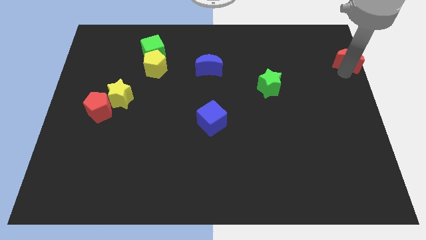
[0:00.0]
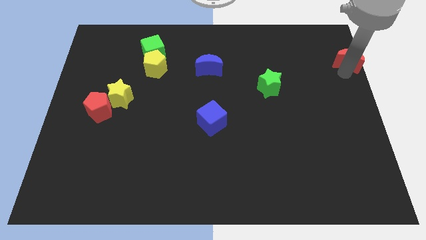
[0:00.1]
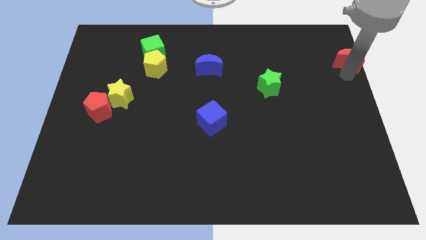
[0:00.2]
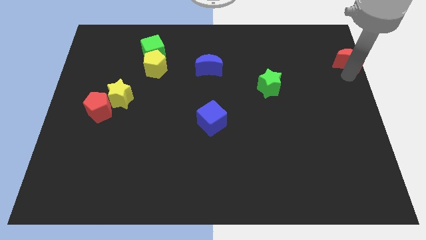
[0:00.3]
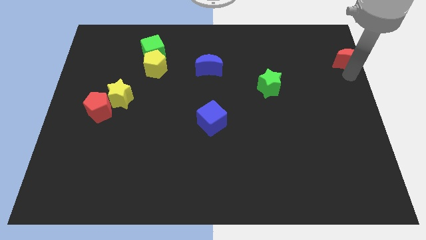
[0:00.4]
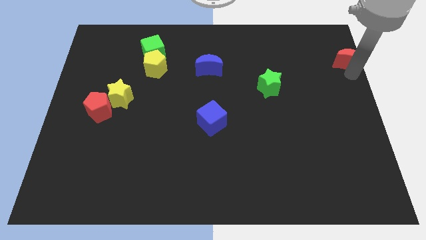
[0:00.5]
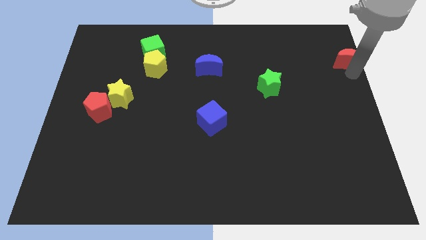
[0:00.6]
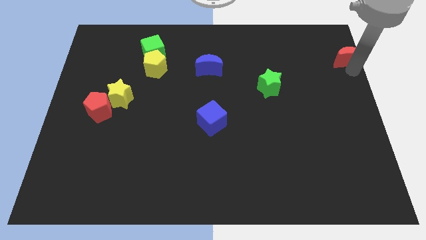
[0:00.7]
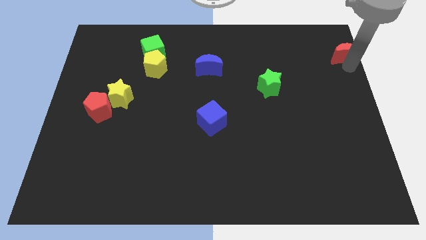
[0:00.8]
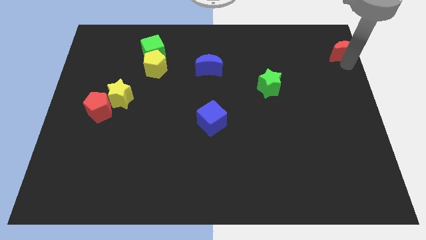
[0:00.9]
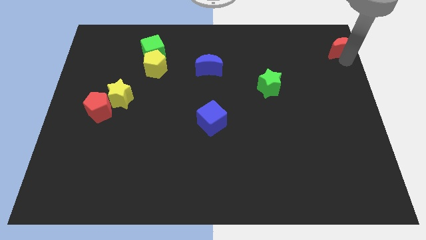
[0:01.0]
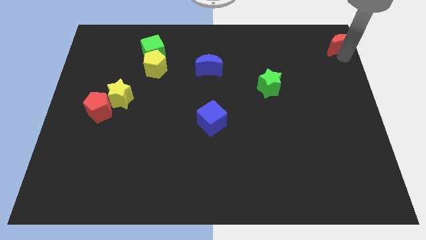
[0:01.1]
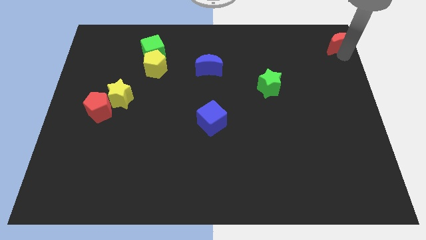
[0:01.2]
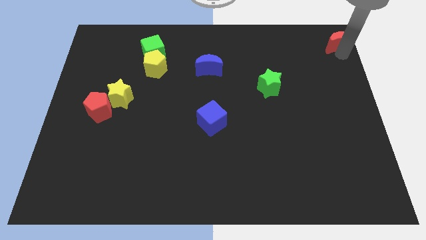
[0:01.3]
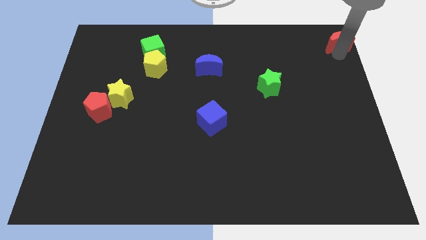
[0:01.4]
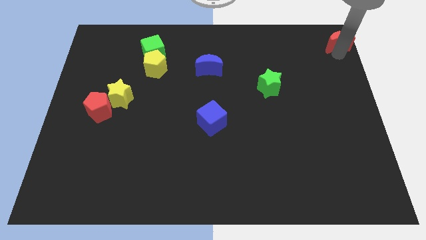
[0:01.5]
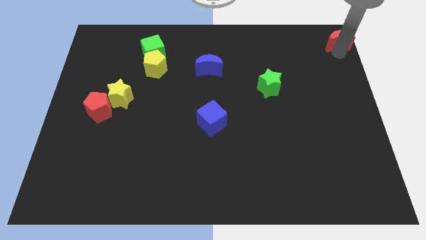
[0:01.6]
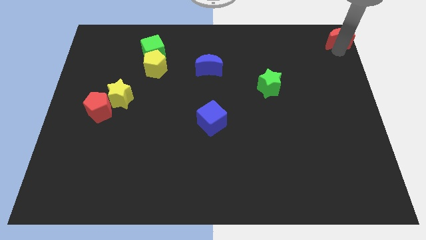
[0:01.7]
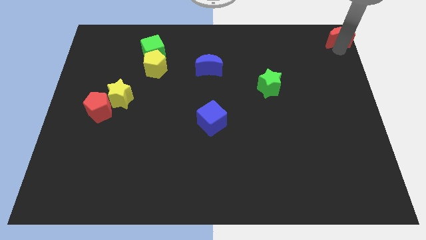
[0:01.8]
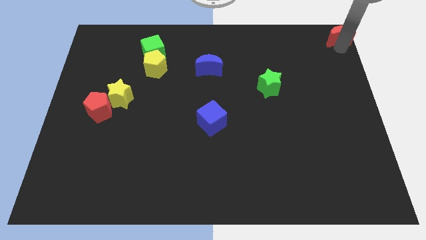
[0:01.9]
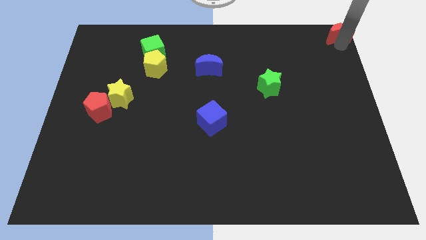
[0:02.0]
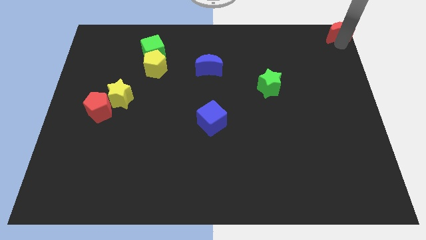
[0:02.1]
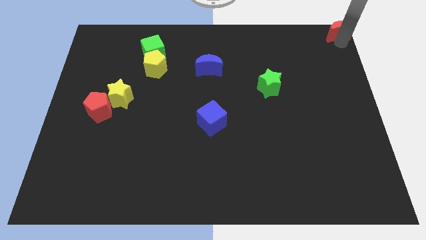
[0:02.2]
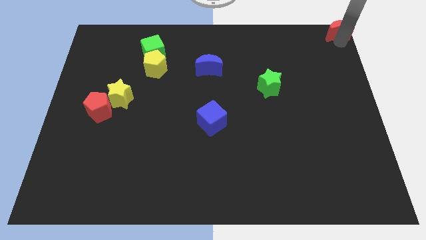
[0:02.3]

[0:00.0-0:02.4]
place the red crescent towards the top right corner

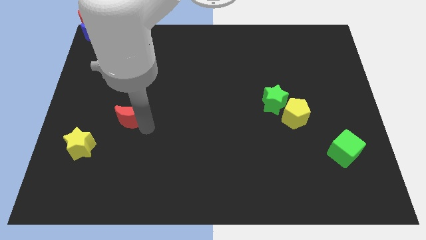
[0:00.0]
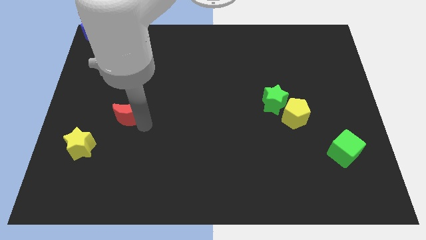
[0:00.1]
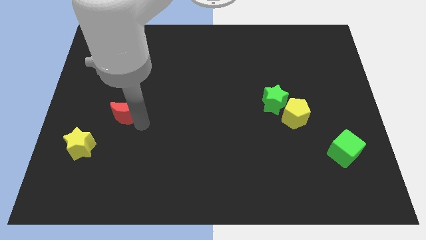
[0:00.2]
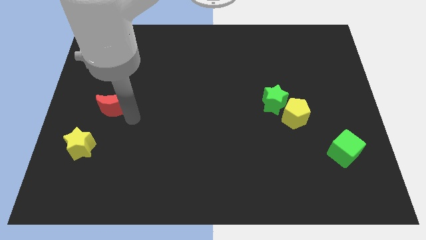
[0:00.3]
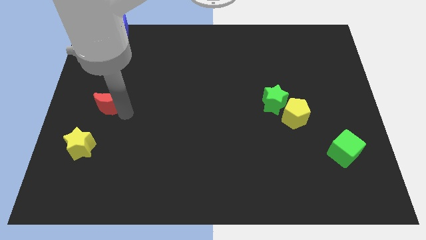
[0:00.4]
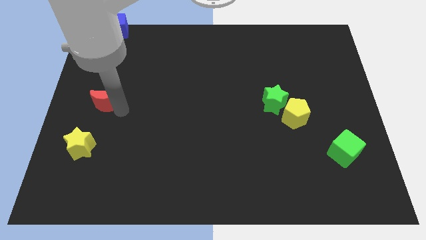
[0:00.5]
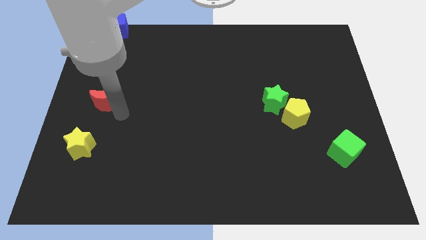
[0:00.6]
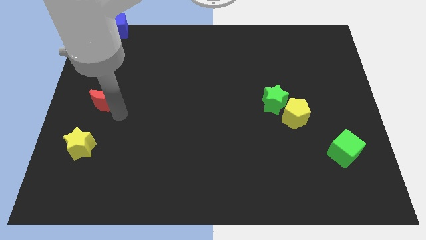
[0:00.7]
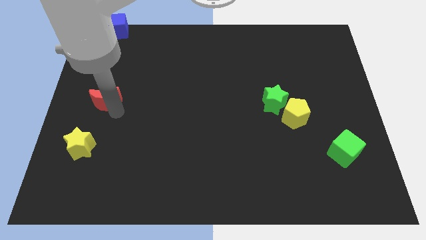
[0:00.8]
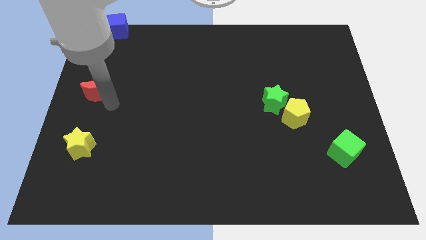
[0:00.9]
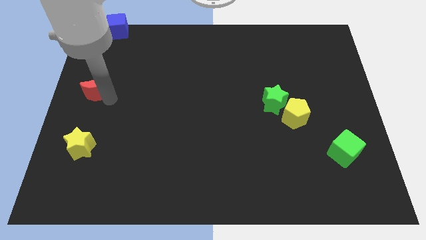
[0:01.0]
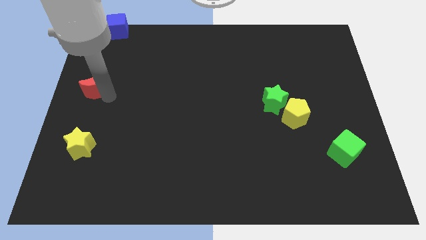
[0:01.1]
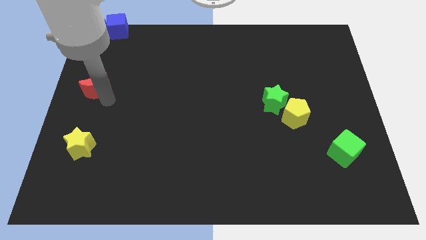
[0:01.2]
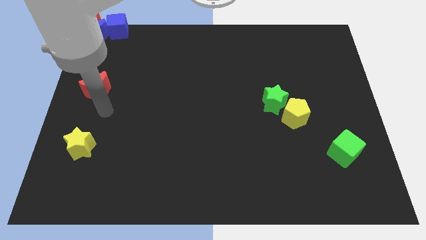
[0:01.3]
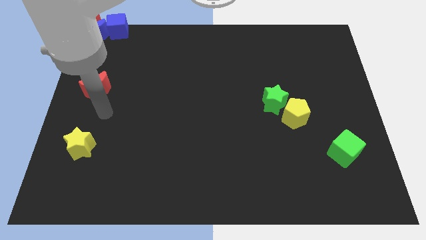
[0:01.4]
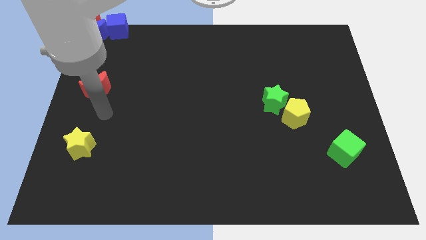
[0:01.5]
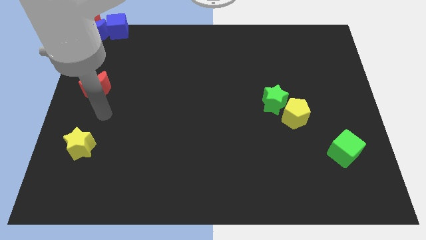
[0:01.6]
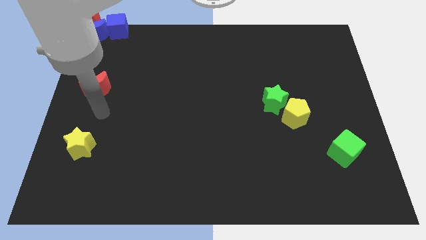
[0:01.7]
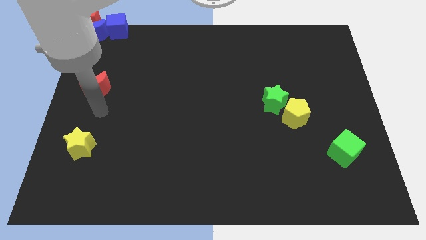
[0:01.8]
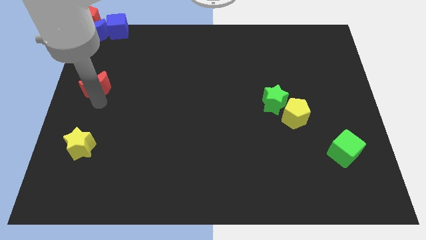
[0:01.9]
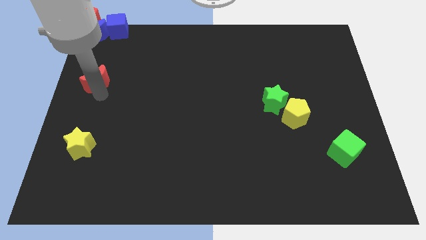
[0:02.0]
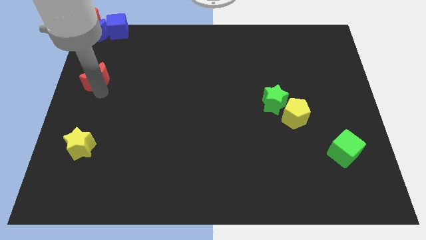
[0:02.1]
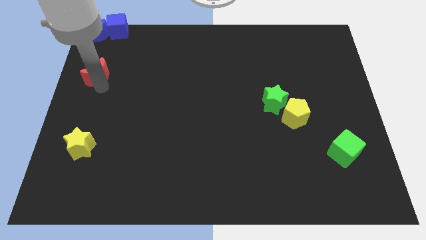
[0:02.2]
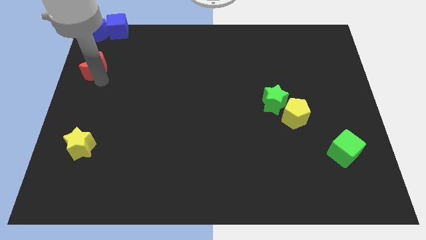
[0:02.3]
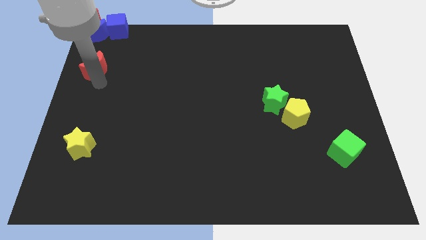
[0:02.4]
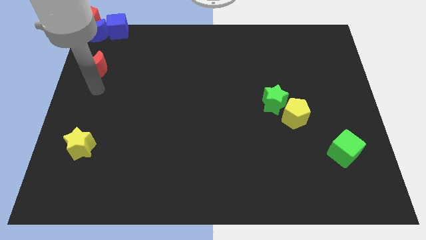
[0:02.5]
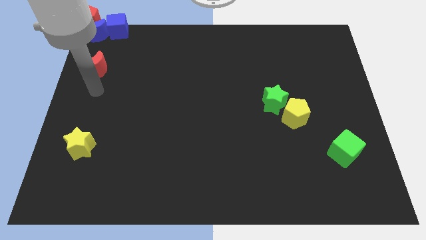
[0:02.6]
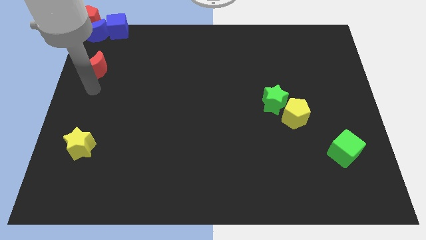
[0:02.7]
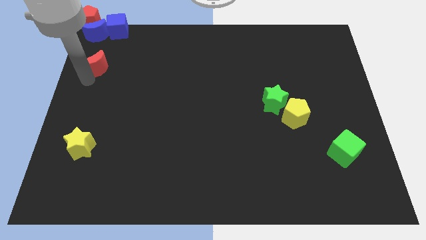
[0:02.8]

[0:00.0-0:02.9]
place red crescent to the center left

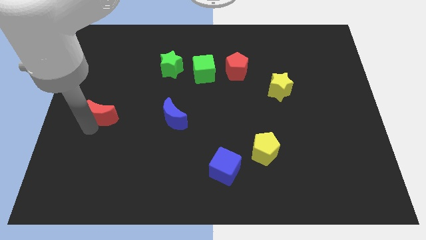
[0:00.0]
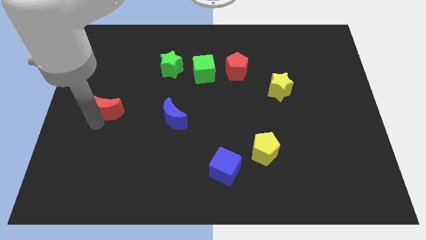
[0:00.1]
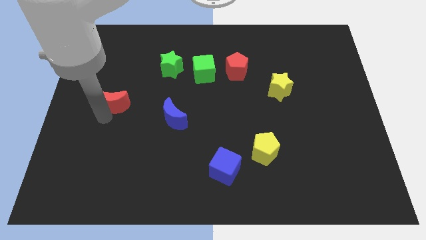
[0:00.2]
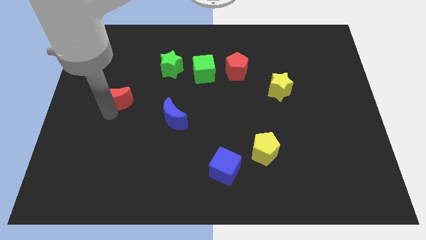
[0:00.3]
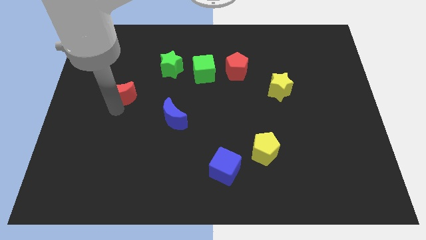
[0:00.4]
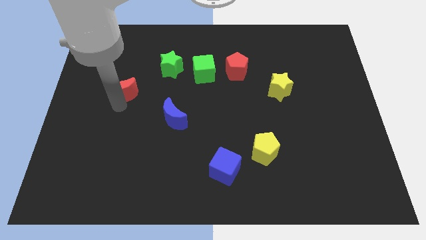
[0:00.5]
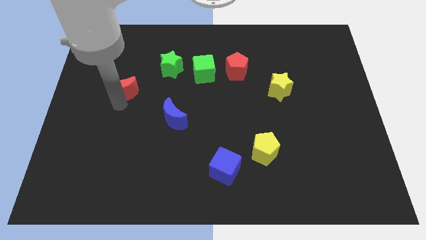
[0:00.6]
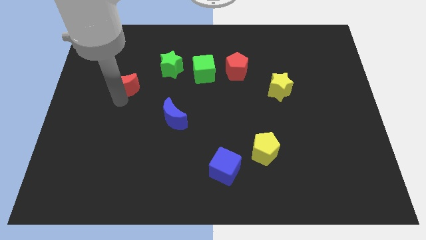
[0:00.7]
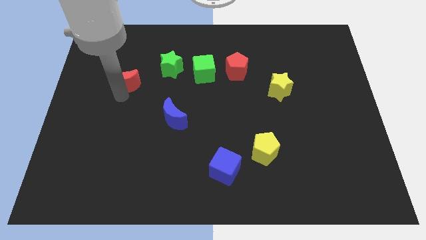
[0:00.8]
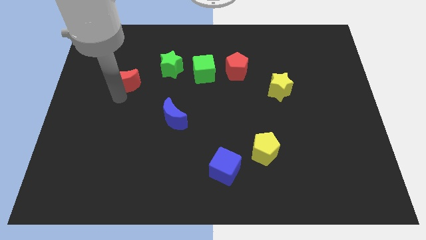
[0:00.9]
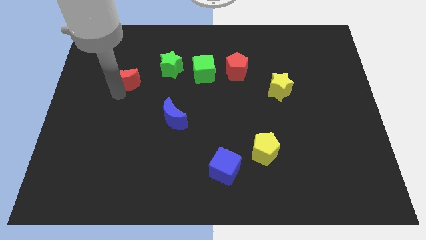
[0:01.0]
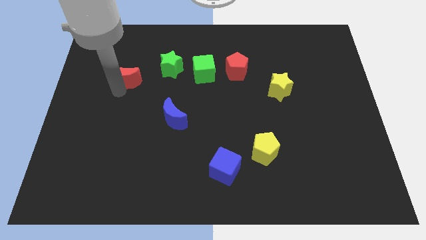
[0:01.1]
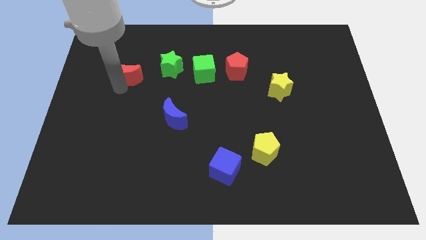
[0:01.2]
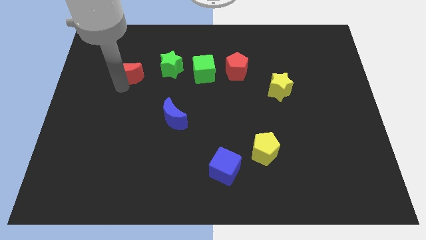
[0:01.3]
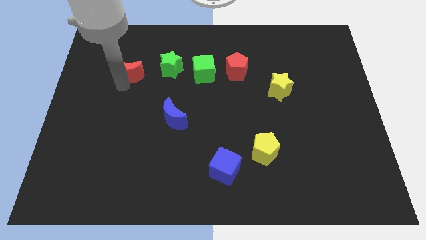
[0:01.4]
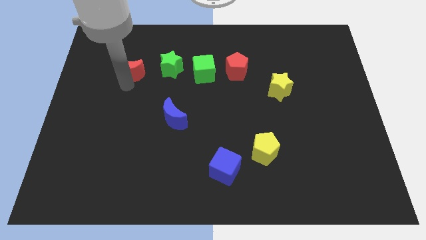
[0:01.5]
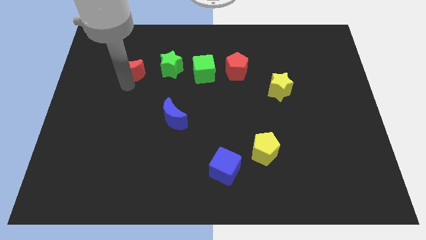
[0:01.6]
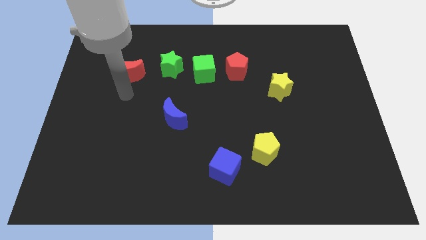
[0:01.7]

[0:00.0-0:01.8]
move red crescent parallel left to green star

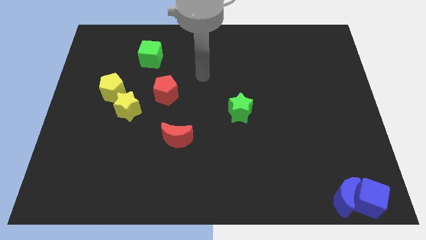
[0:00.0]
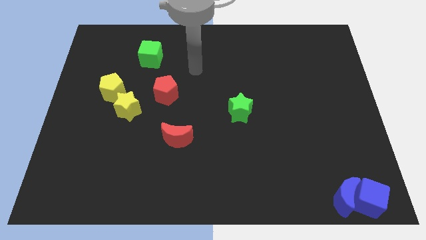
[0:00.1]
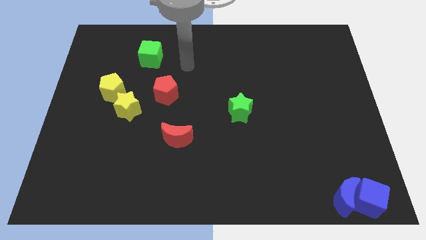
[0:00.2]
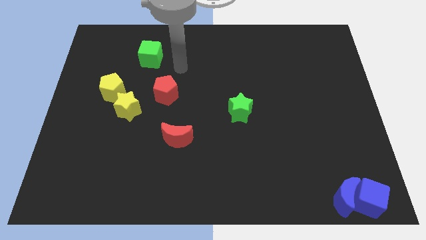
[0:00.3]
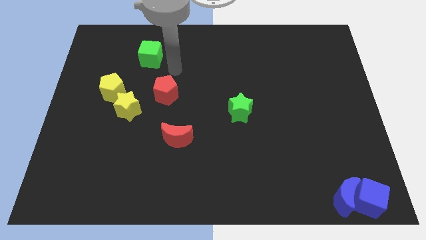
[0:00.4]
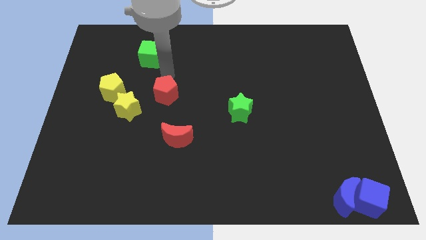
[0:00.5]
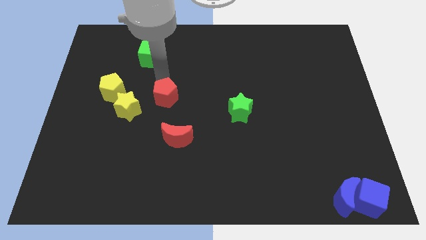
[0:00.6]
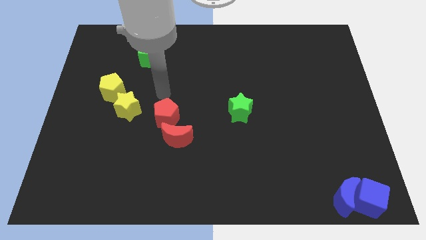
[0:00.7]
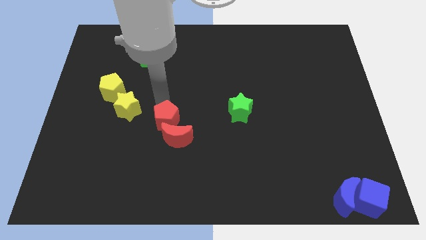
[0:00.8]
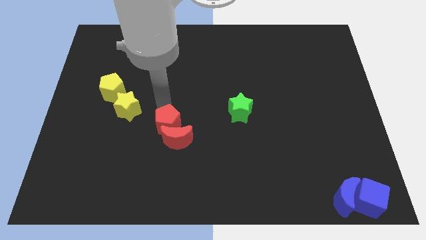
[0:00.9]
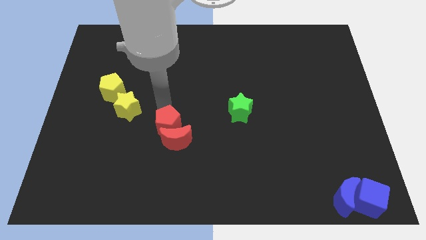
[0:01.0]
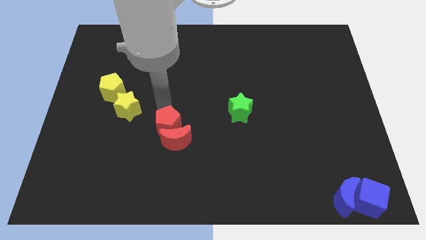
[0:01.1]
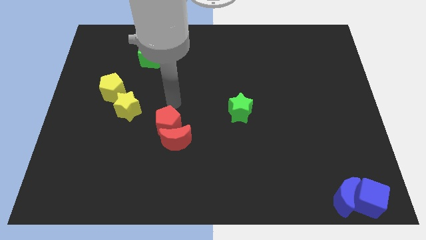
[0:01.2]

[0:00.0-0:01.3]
push red pentagon in to red moon

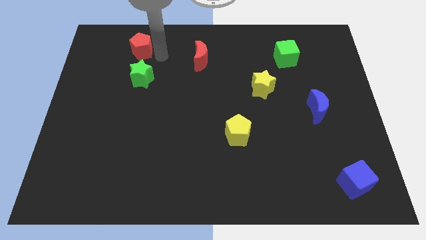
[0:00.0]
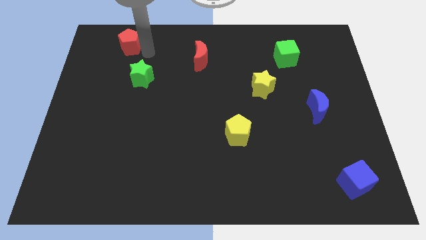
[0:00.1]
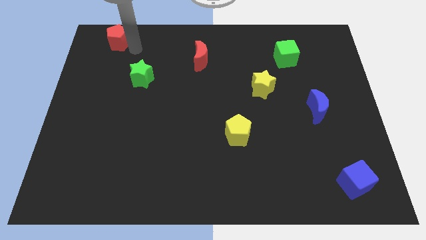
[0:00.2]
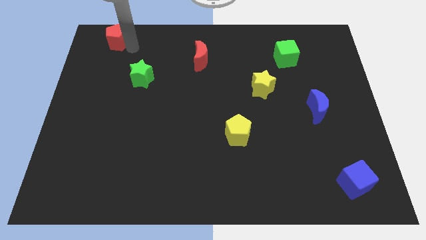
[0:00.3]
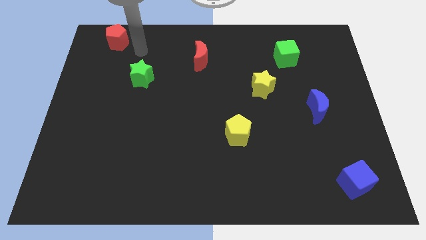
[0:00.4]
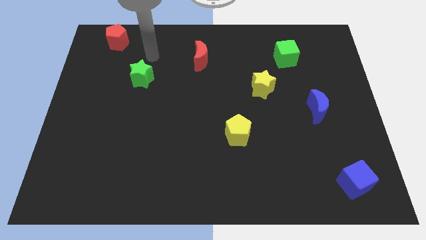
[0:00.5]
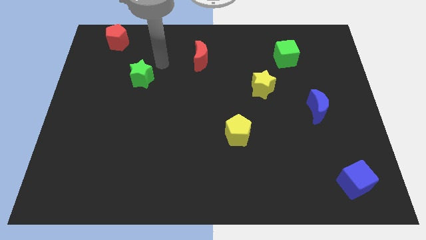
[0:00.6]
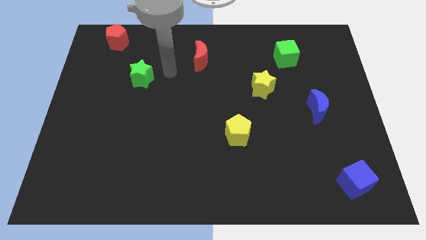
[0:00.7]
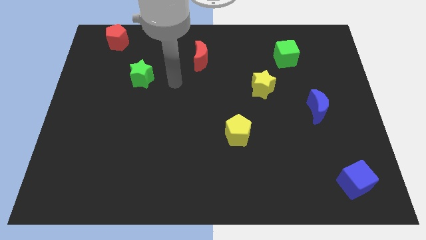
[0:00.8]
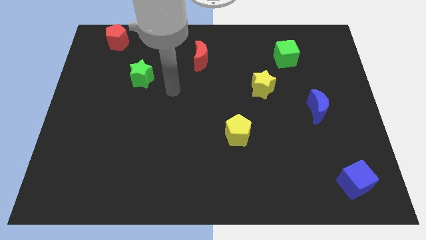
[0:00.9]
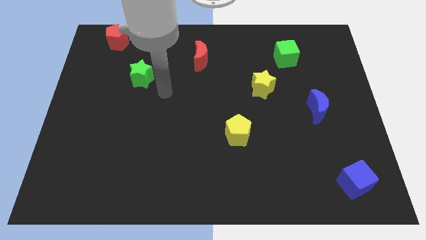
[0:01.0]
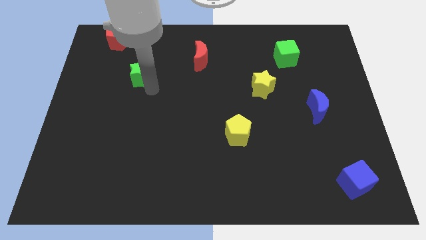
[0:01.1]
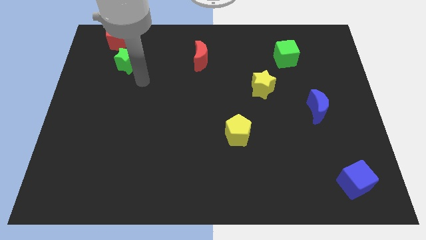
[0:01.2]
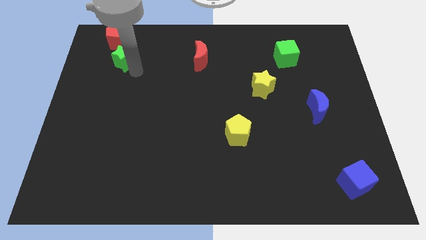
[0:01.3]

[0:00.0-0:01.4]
place the green star close to the red pentagon
